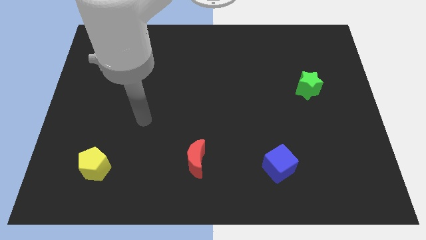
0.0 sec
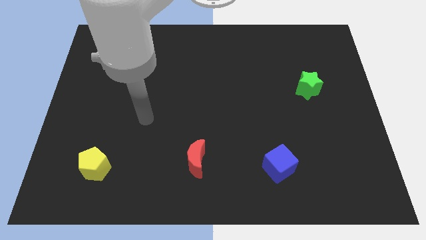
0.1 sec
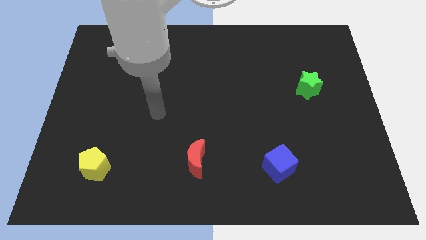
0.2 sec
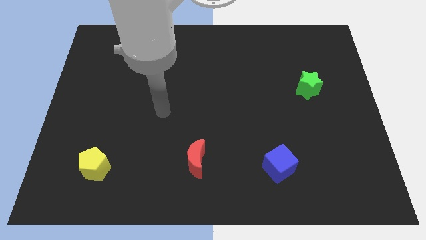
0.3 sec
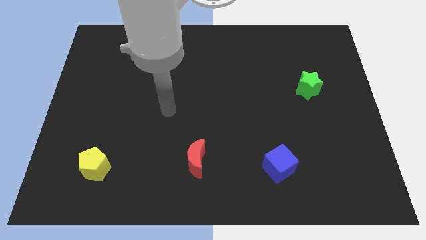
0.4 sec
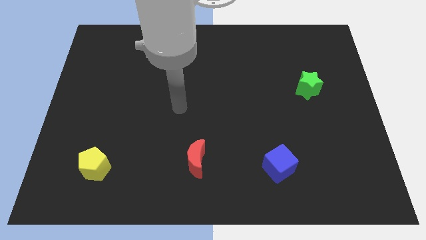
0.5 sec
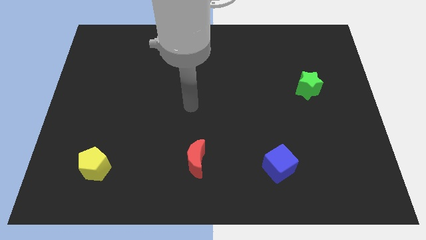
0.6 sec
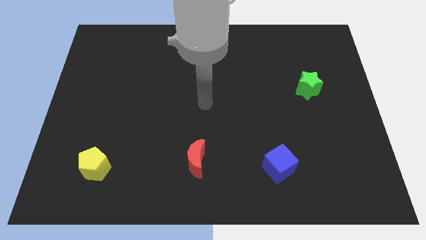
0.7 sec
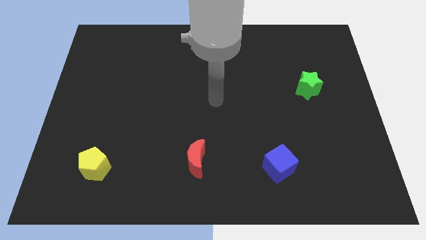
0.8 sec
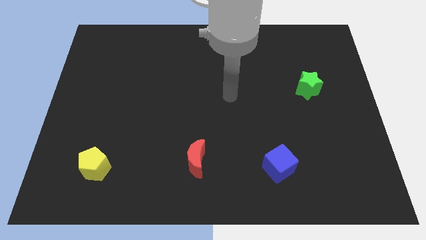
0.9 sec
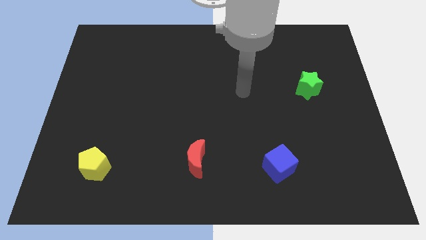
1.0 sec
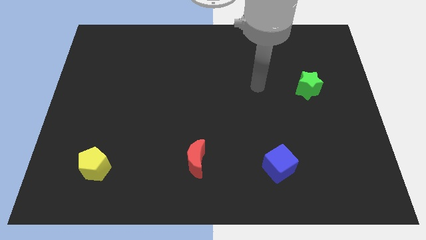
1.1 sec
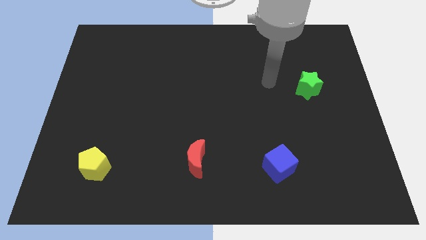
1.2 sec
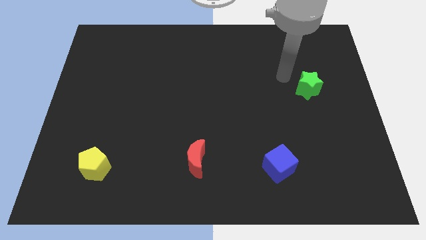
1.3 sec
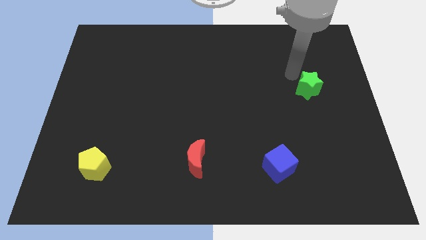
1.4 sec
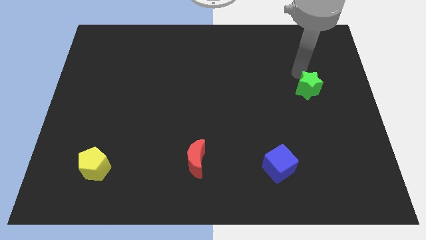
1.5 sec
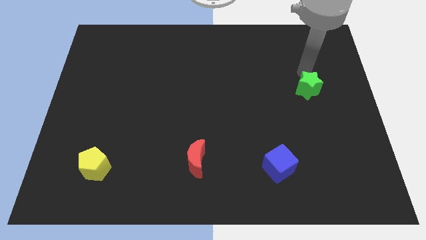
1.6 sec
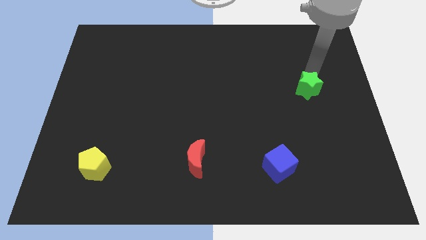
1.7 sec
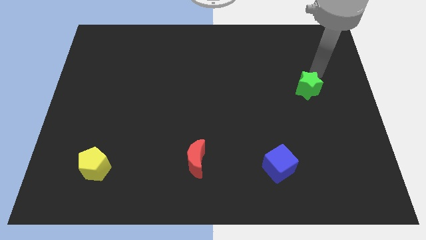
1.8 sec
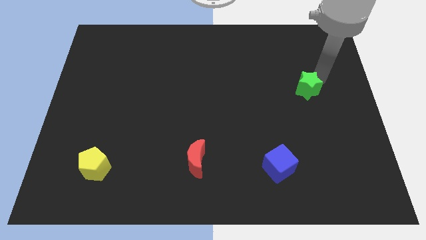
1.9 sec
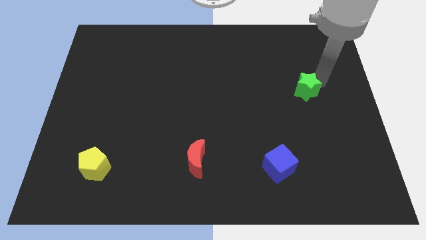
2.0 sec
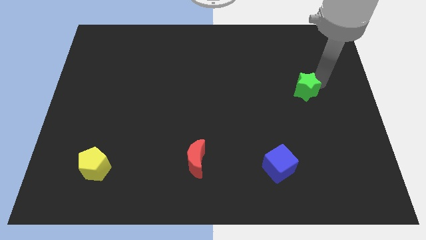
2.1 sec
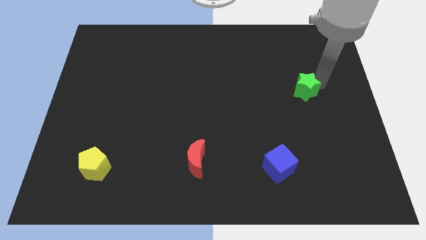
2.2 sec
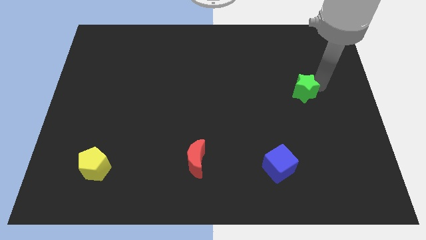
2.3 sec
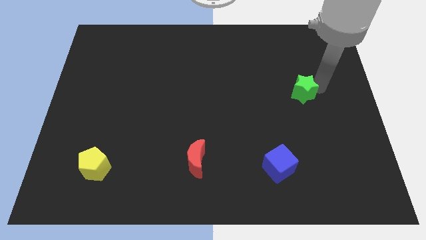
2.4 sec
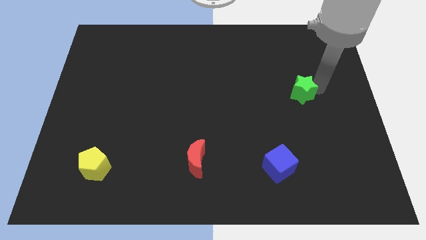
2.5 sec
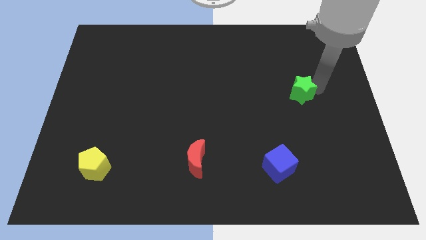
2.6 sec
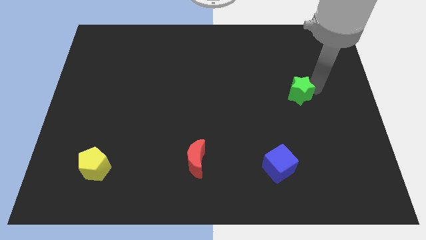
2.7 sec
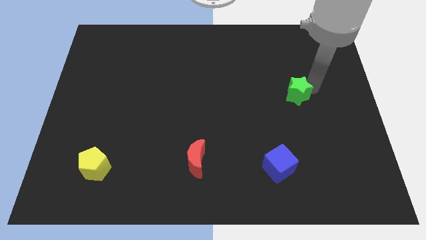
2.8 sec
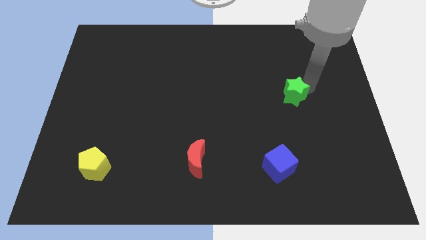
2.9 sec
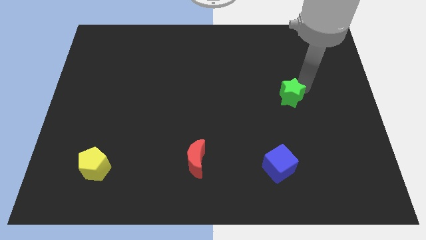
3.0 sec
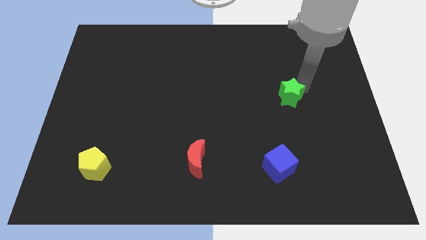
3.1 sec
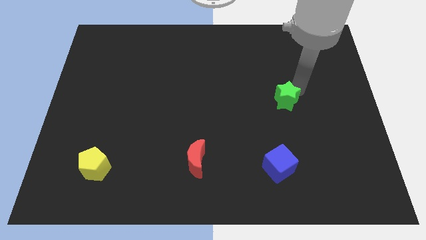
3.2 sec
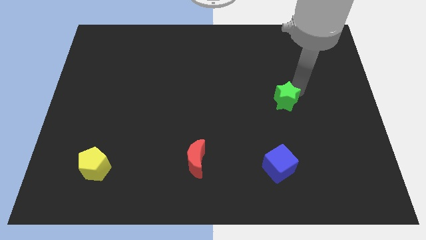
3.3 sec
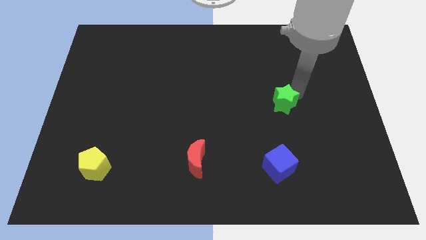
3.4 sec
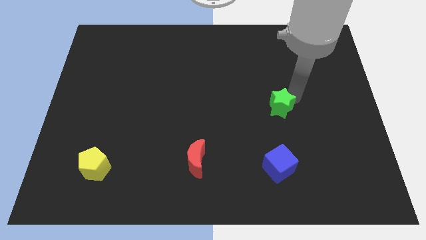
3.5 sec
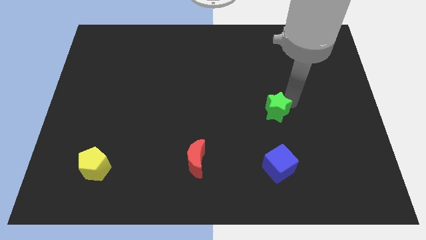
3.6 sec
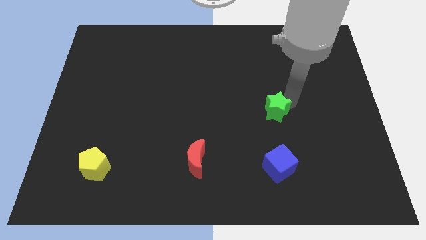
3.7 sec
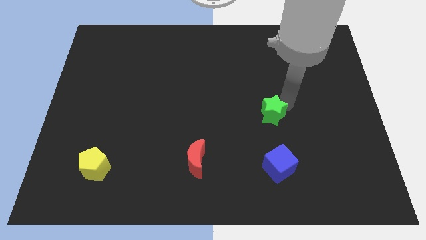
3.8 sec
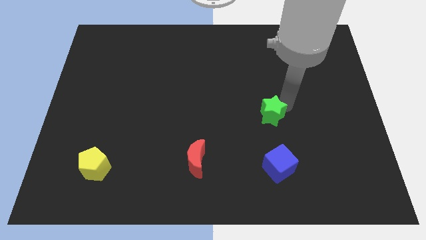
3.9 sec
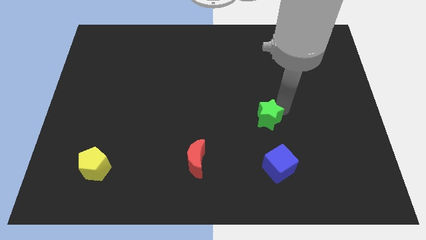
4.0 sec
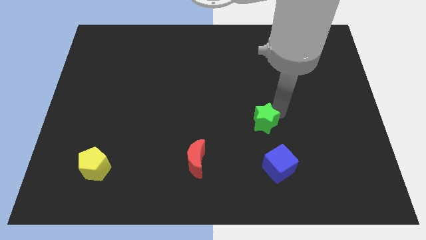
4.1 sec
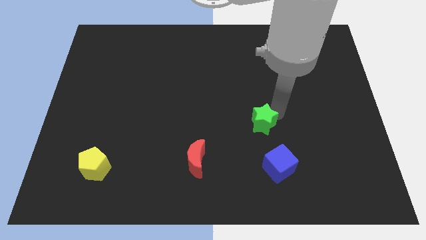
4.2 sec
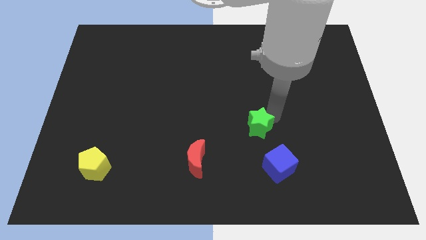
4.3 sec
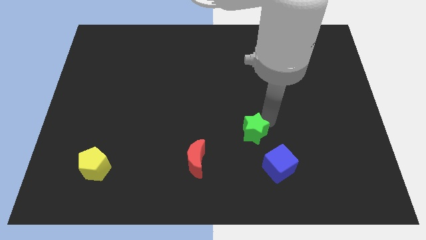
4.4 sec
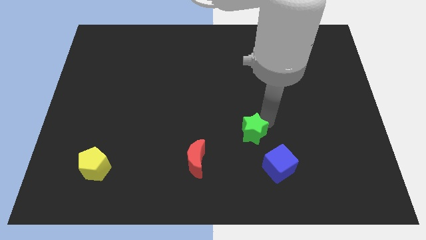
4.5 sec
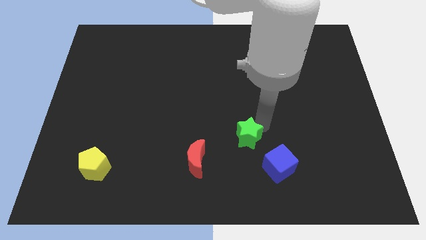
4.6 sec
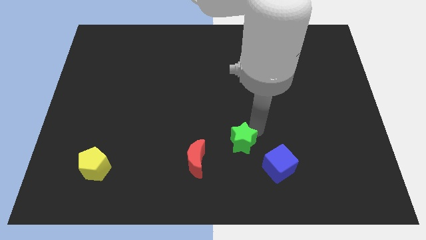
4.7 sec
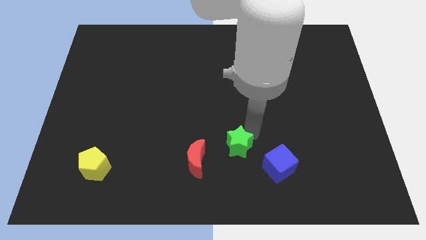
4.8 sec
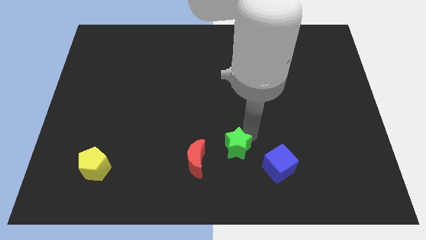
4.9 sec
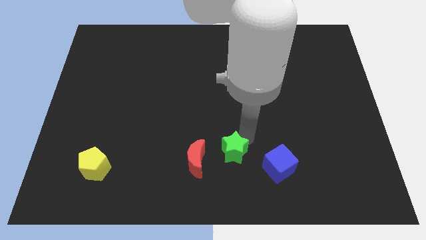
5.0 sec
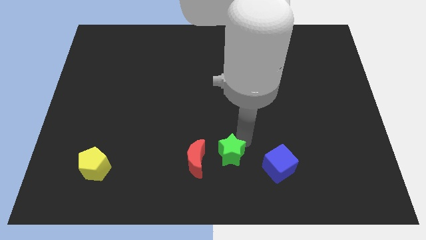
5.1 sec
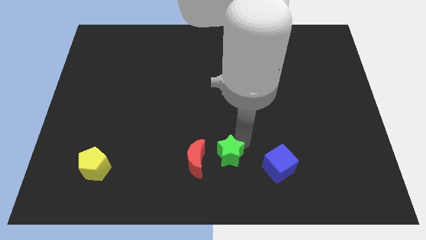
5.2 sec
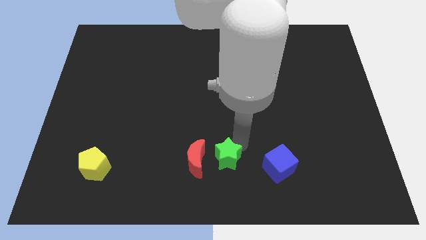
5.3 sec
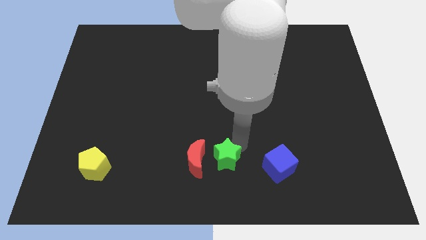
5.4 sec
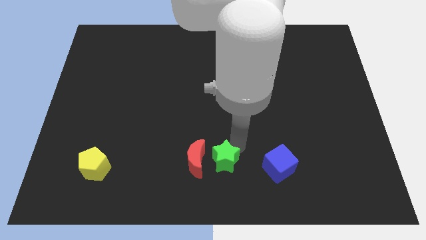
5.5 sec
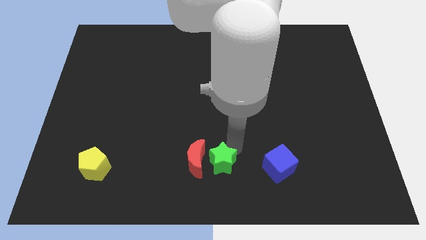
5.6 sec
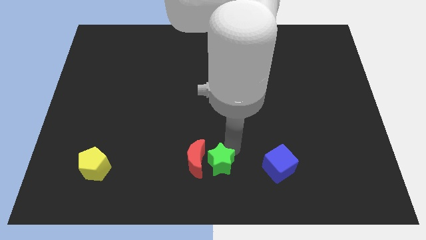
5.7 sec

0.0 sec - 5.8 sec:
move the green star to the moon

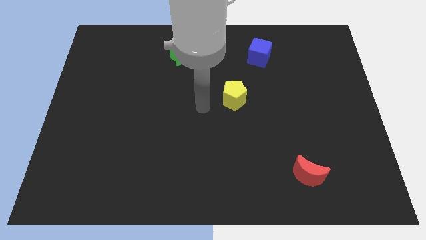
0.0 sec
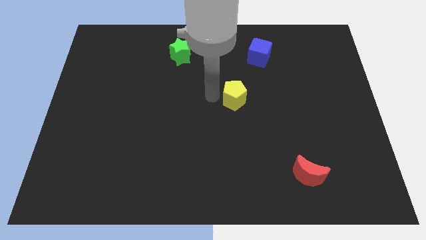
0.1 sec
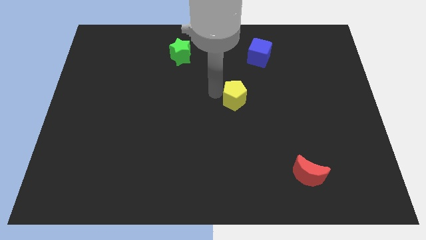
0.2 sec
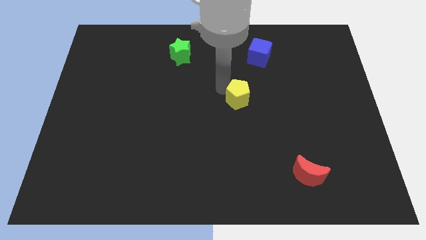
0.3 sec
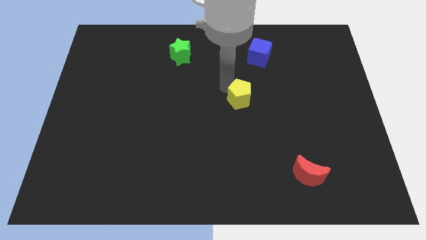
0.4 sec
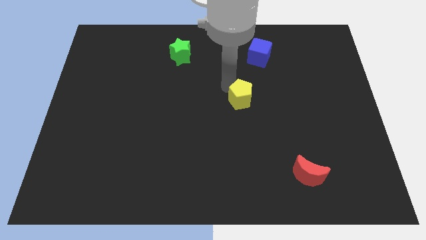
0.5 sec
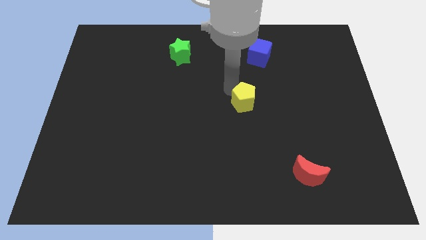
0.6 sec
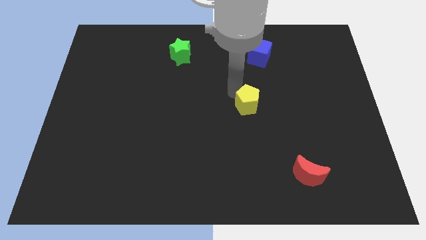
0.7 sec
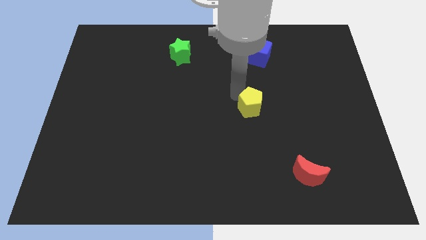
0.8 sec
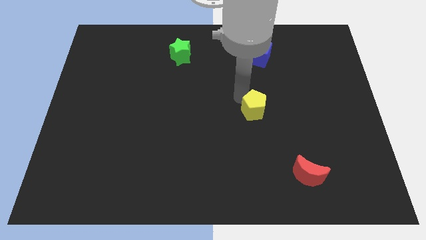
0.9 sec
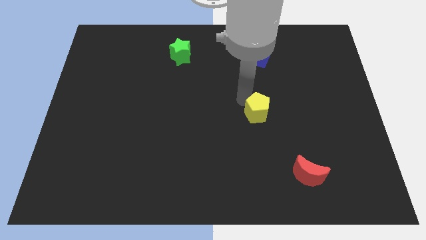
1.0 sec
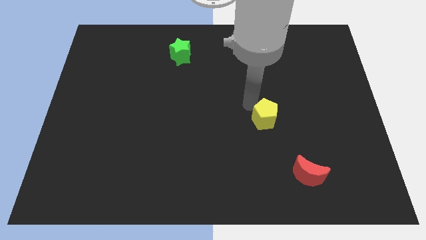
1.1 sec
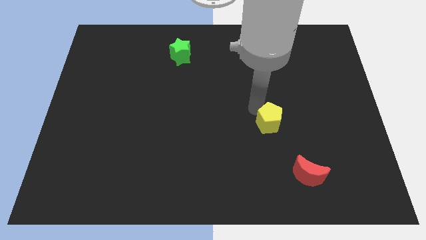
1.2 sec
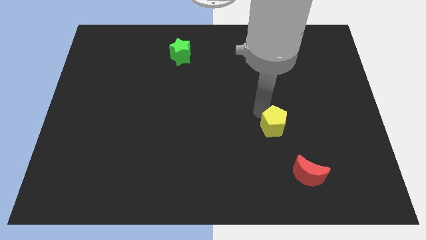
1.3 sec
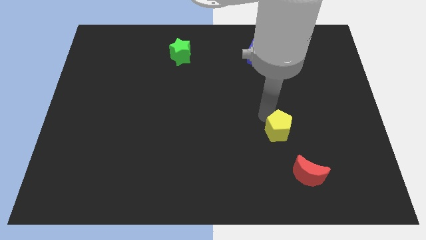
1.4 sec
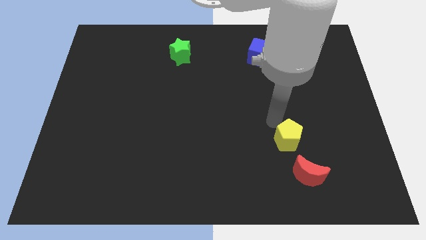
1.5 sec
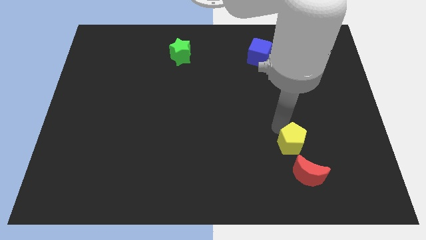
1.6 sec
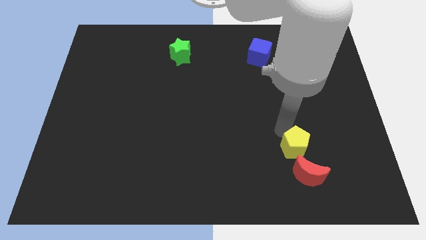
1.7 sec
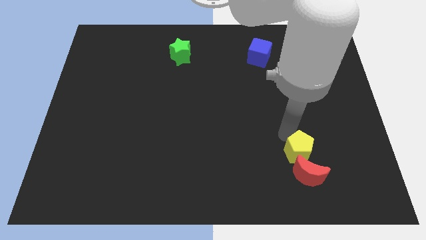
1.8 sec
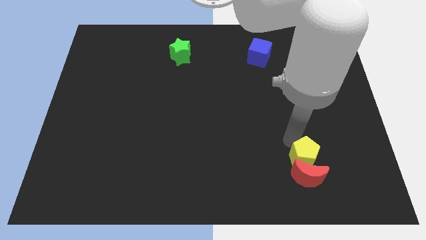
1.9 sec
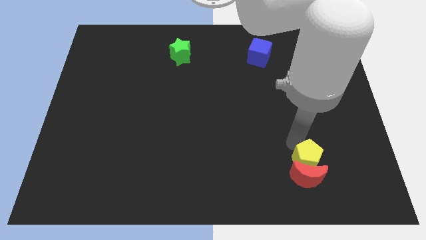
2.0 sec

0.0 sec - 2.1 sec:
put the yellow block to the red moon

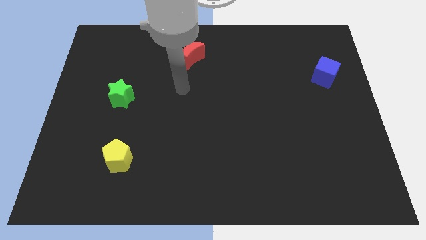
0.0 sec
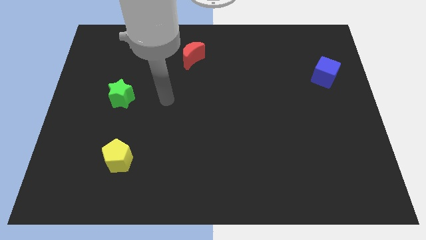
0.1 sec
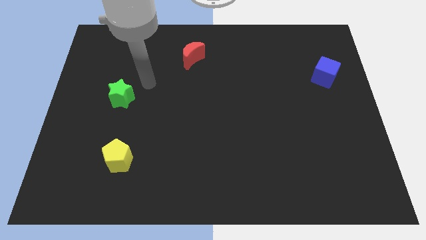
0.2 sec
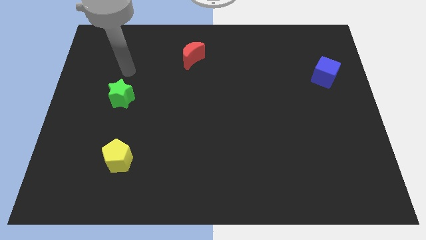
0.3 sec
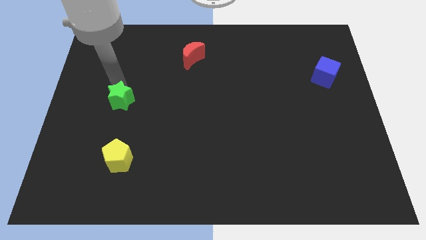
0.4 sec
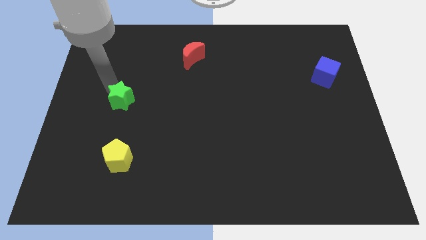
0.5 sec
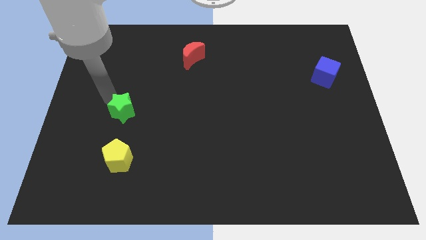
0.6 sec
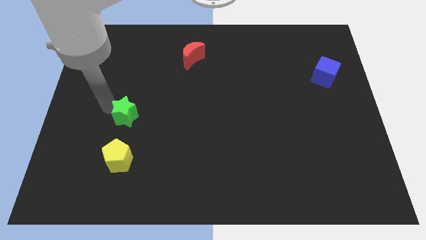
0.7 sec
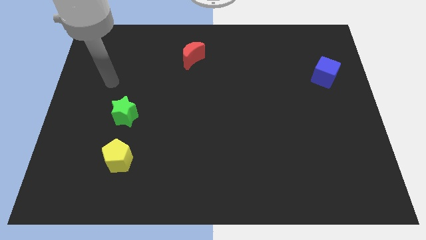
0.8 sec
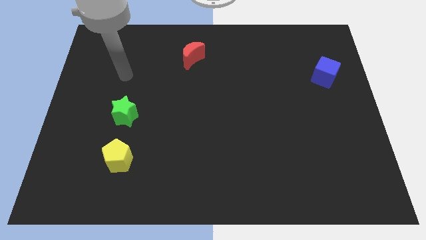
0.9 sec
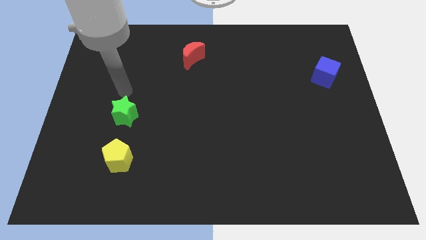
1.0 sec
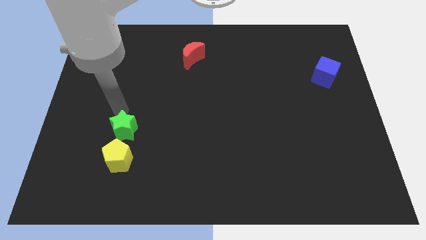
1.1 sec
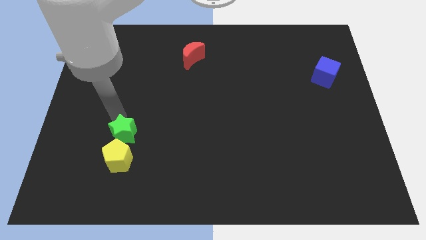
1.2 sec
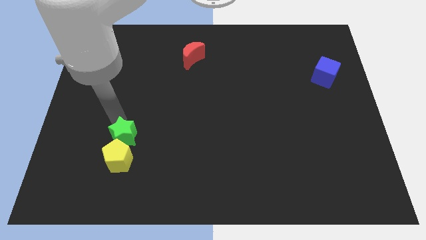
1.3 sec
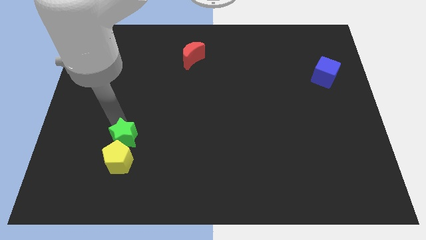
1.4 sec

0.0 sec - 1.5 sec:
move the green block to the yellow block
